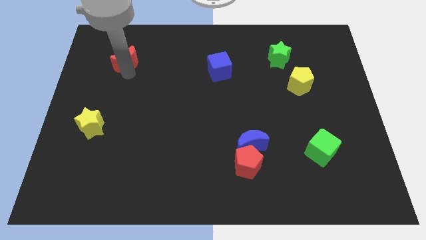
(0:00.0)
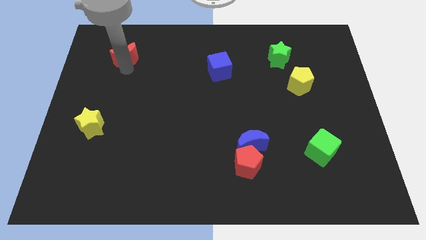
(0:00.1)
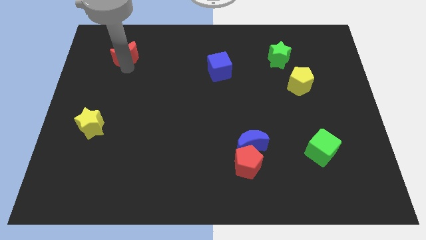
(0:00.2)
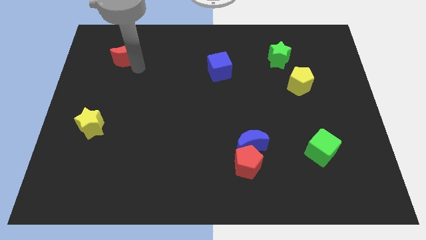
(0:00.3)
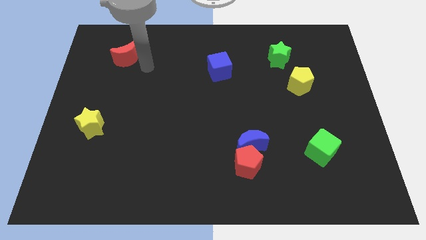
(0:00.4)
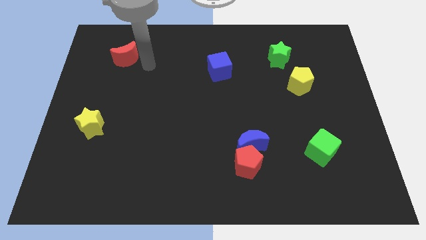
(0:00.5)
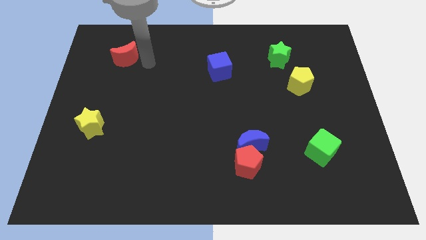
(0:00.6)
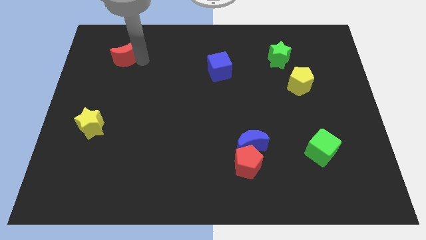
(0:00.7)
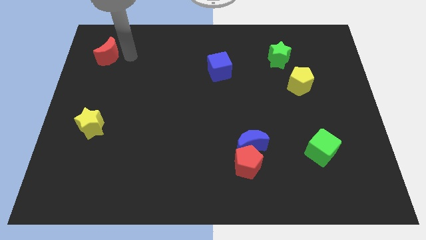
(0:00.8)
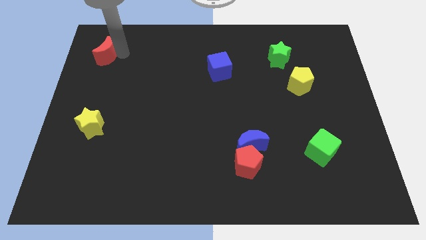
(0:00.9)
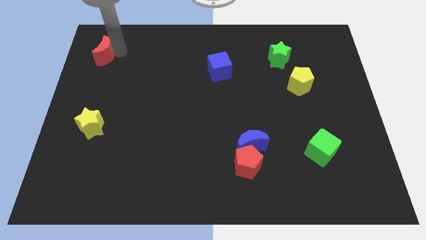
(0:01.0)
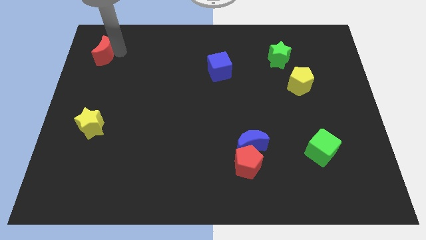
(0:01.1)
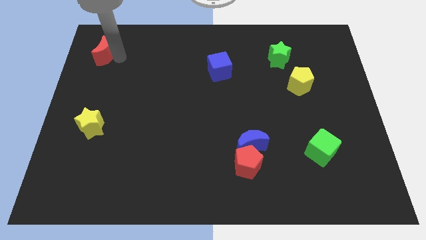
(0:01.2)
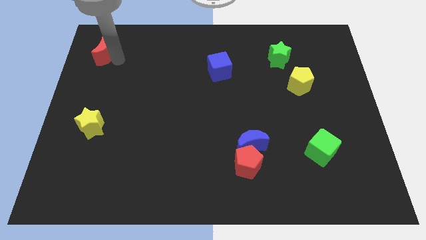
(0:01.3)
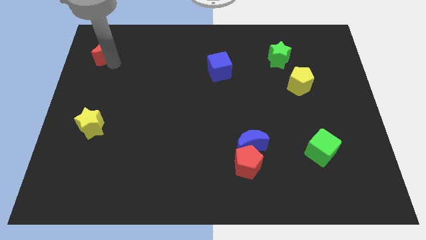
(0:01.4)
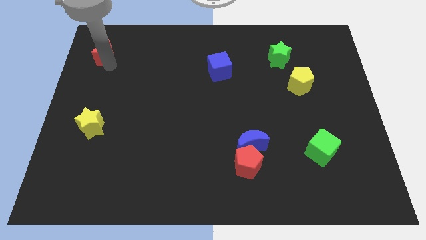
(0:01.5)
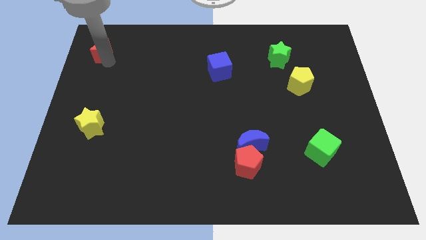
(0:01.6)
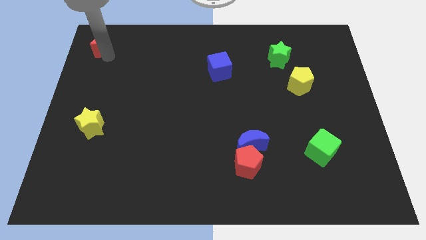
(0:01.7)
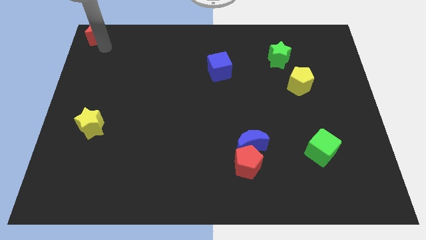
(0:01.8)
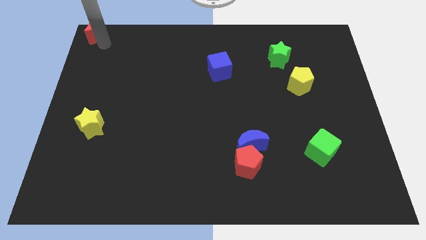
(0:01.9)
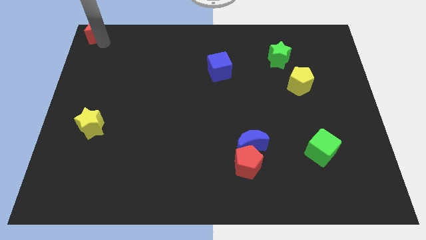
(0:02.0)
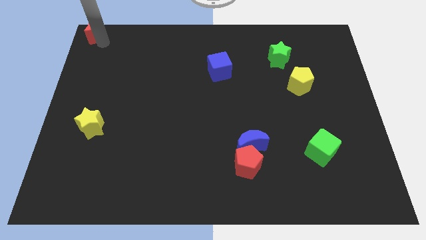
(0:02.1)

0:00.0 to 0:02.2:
place red moon to the top left corner

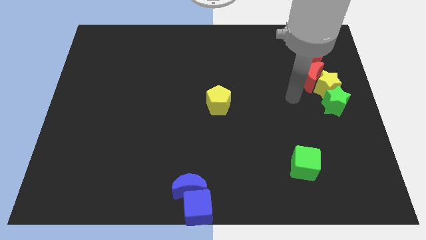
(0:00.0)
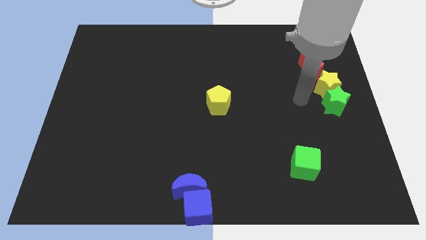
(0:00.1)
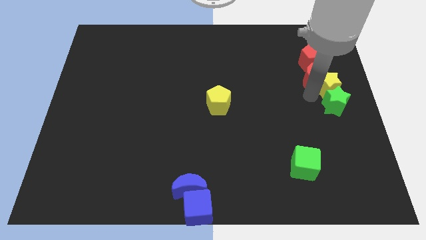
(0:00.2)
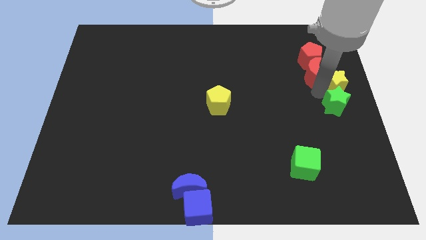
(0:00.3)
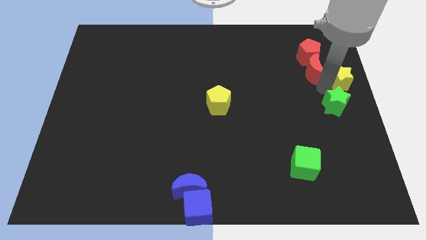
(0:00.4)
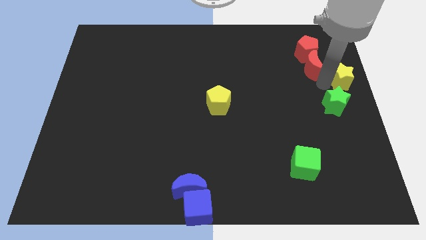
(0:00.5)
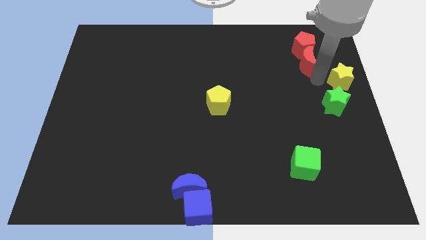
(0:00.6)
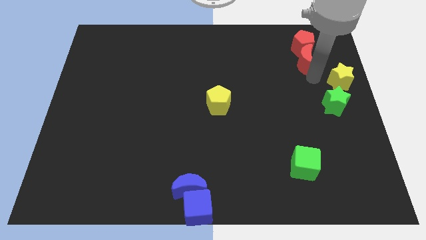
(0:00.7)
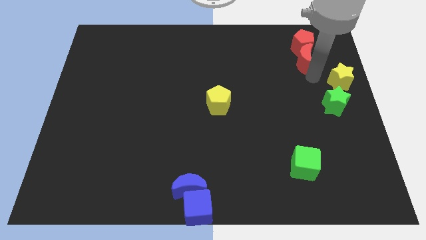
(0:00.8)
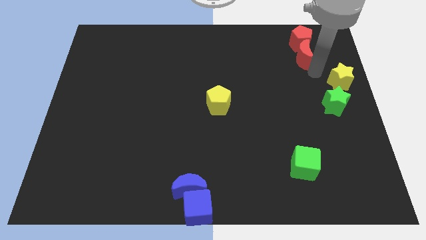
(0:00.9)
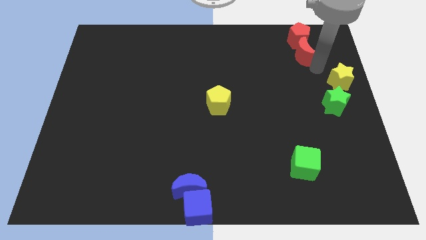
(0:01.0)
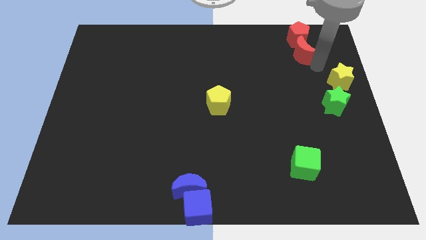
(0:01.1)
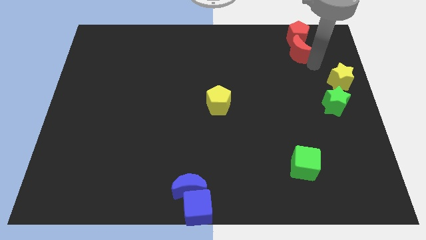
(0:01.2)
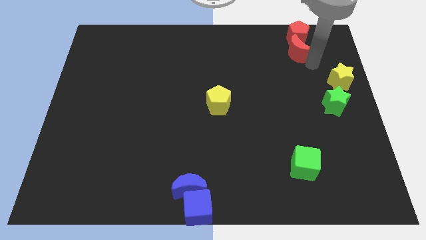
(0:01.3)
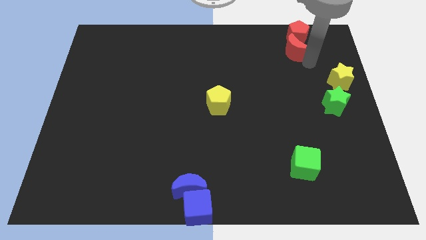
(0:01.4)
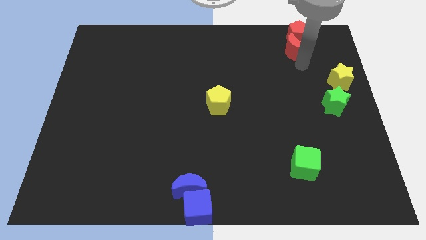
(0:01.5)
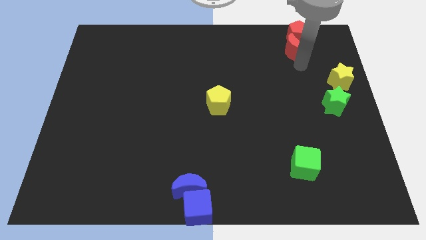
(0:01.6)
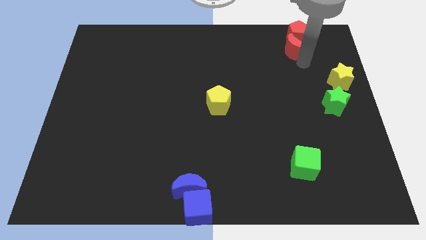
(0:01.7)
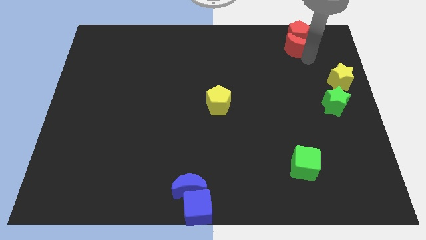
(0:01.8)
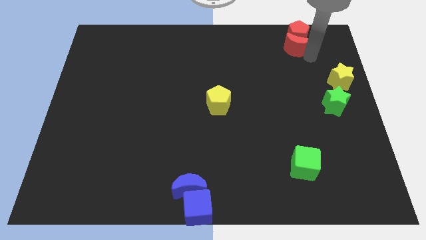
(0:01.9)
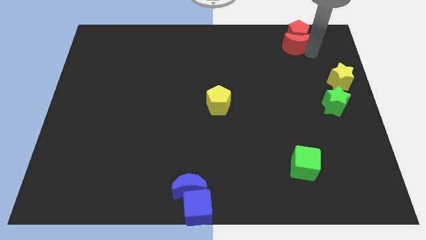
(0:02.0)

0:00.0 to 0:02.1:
push the red crescent with red pentagon to the top right of the board

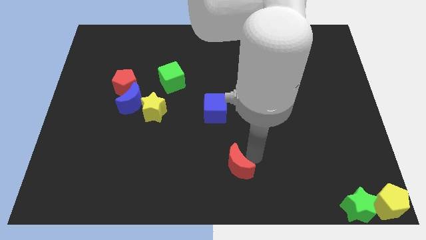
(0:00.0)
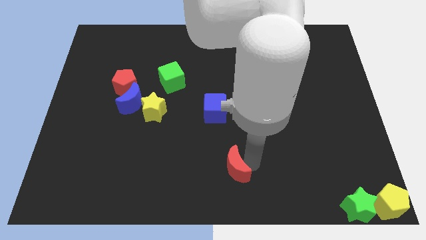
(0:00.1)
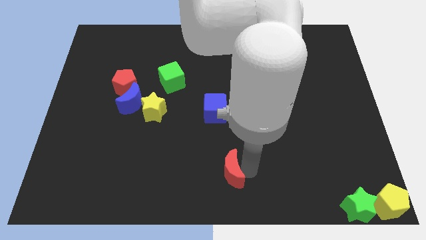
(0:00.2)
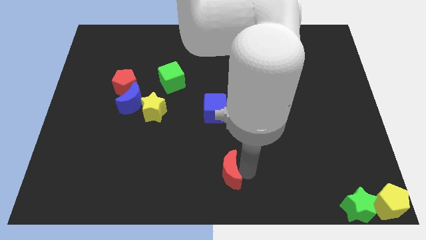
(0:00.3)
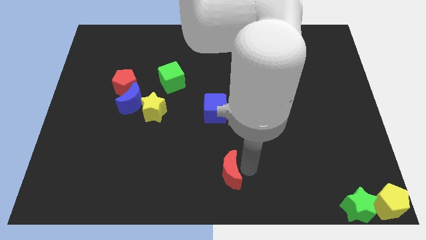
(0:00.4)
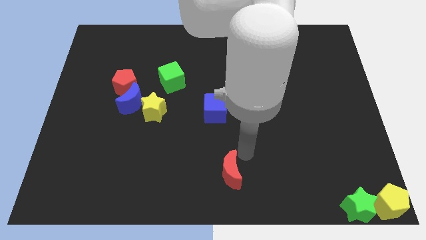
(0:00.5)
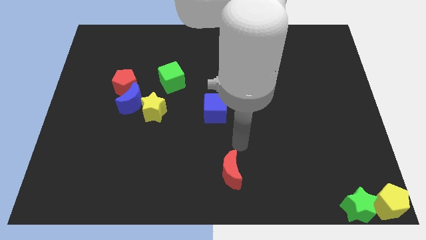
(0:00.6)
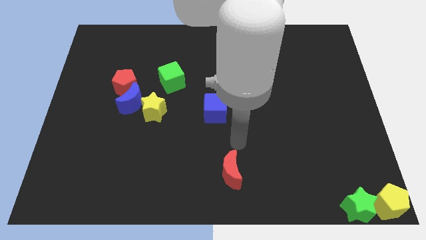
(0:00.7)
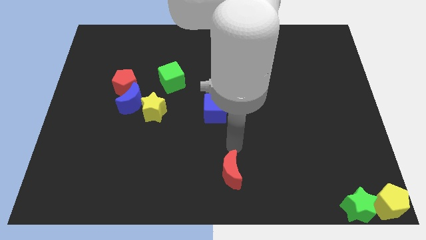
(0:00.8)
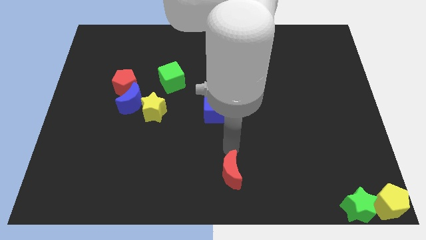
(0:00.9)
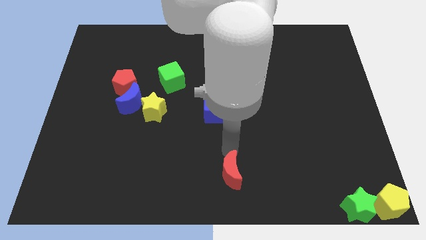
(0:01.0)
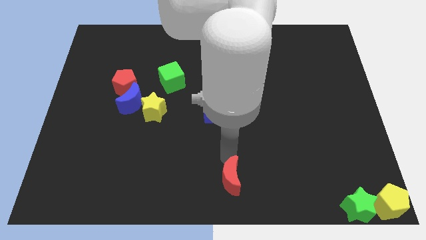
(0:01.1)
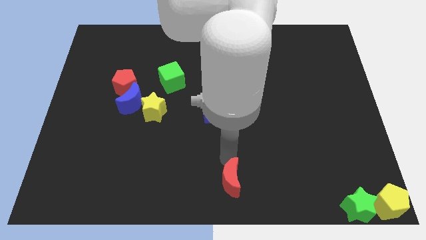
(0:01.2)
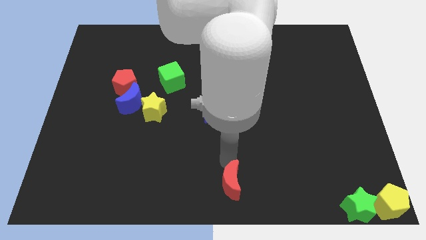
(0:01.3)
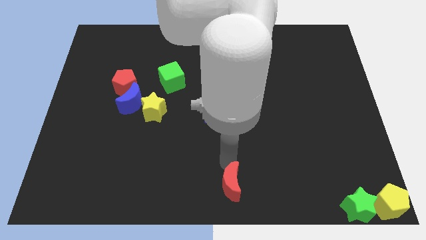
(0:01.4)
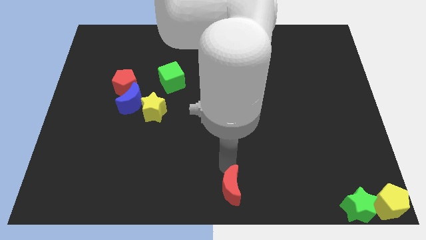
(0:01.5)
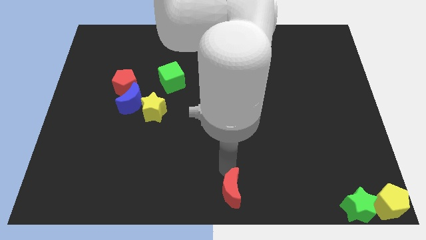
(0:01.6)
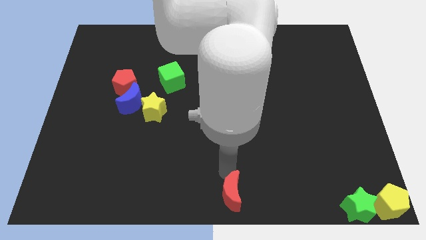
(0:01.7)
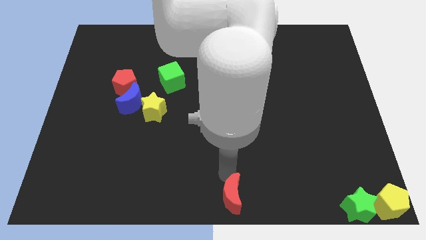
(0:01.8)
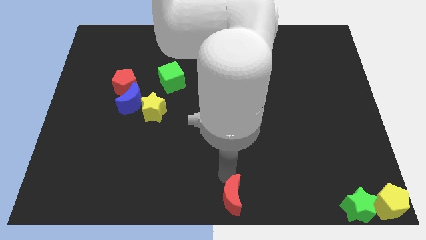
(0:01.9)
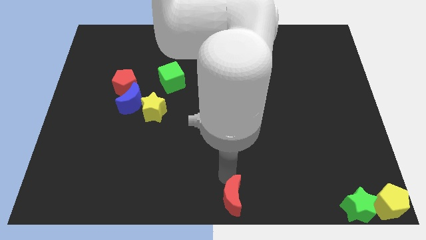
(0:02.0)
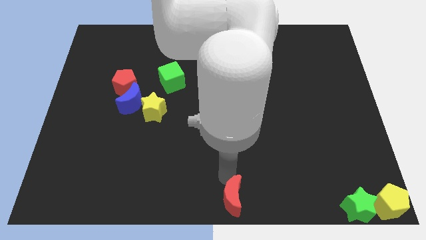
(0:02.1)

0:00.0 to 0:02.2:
place red moon to the bottom center of the board

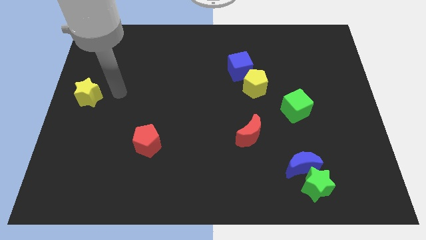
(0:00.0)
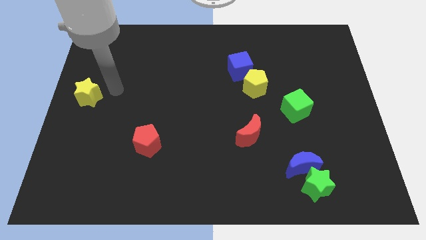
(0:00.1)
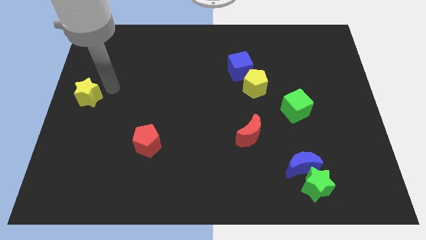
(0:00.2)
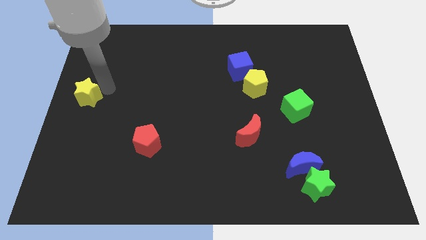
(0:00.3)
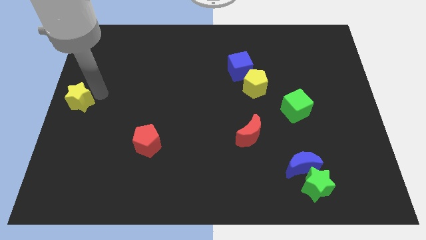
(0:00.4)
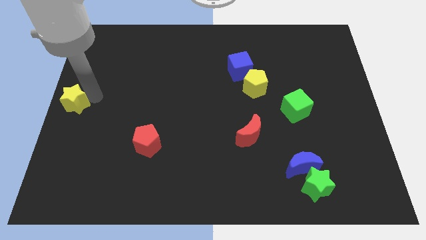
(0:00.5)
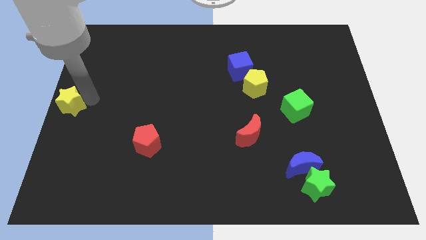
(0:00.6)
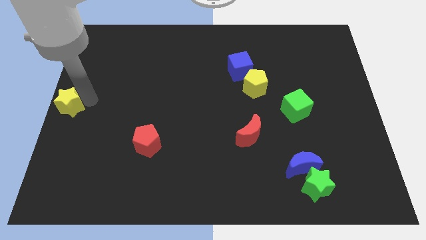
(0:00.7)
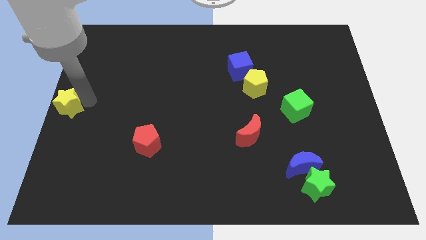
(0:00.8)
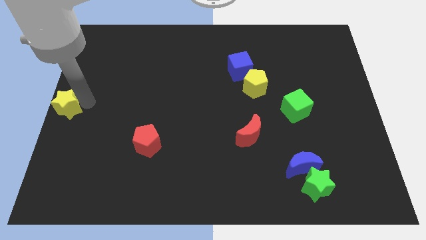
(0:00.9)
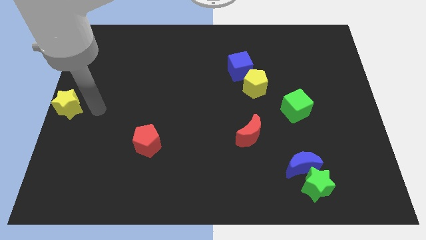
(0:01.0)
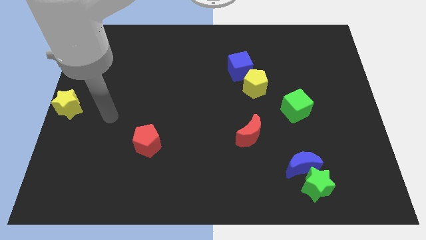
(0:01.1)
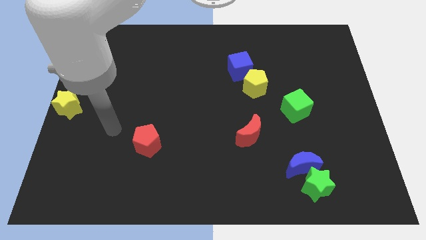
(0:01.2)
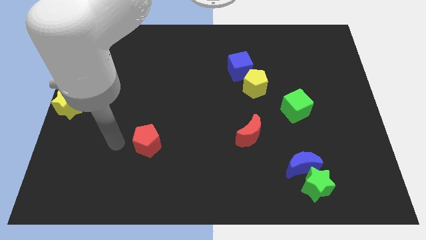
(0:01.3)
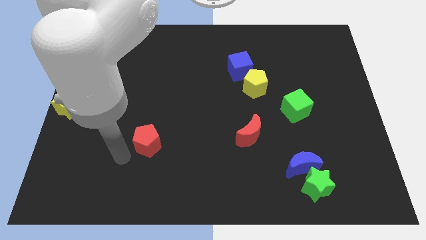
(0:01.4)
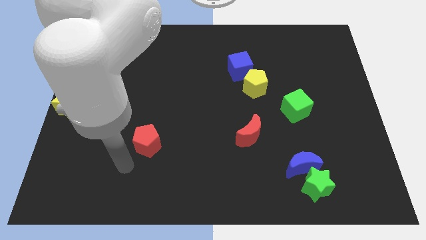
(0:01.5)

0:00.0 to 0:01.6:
put the yellow star at the center left corner

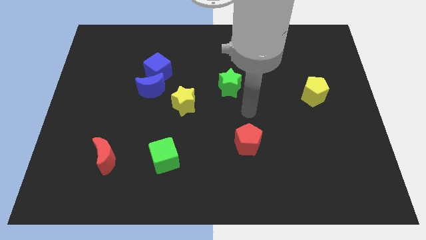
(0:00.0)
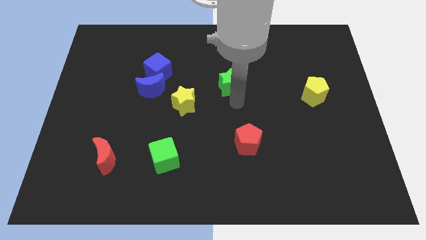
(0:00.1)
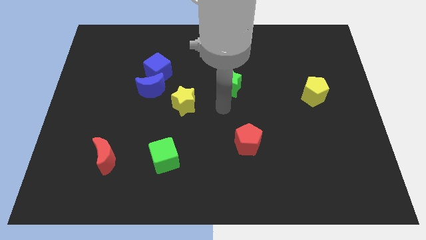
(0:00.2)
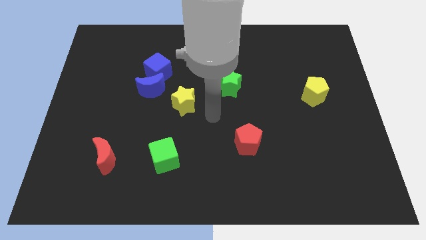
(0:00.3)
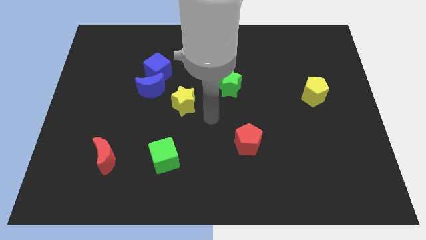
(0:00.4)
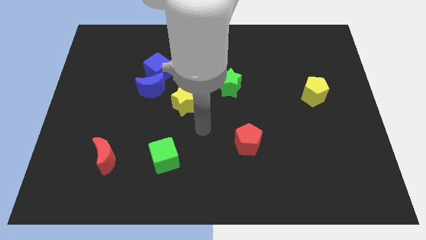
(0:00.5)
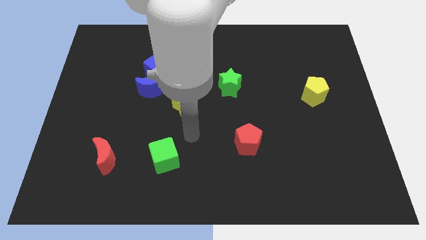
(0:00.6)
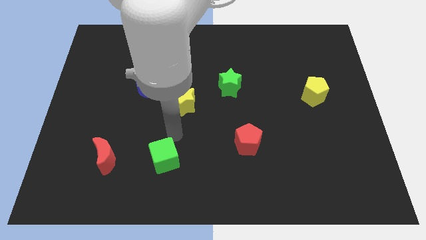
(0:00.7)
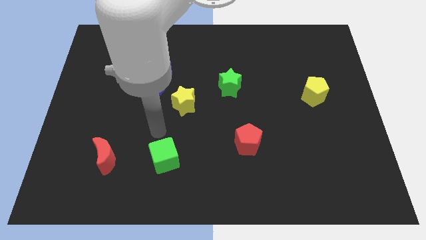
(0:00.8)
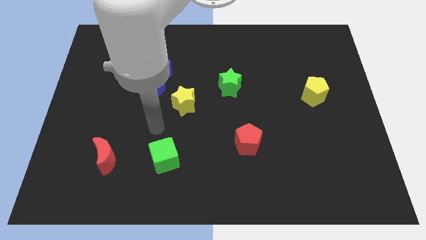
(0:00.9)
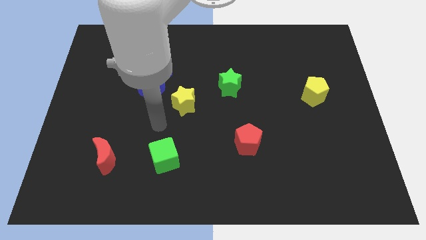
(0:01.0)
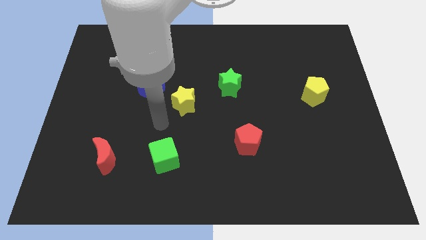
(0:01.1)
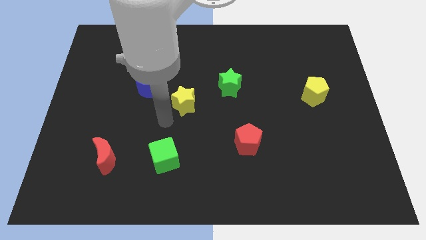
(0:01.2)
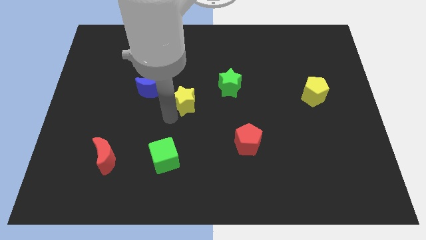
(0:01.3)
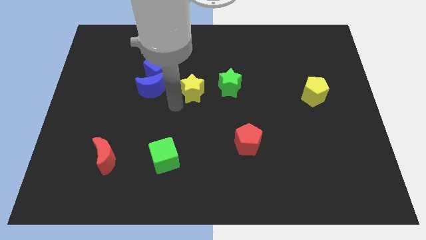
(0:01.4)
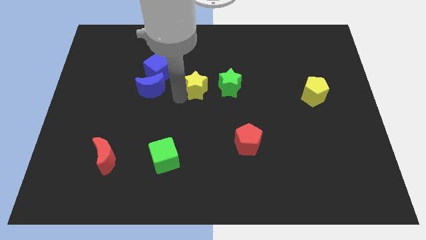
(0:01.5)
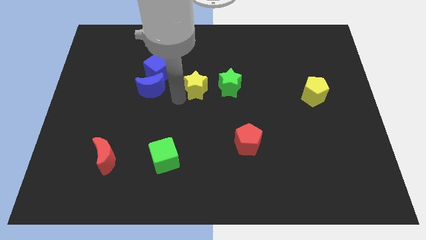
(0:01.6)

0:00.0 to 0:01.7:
put the yellow star left to the green star
